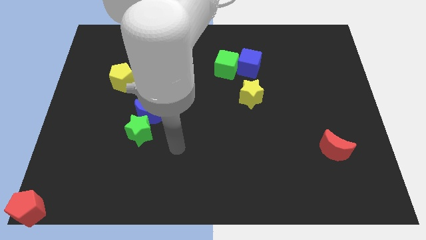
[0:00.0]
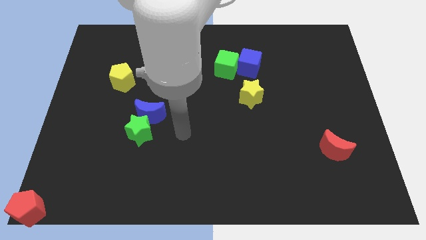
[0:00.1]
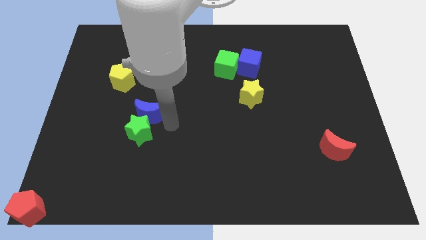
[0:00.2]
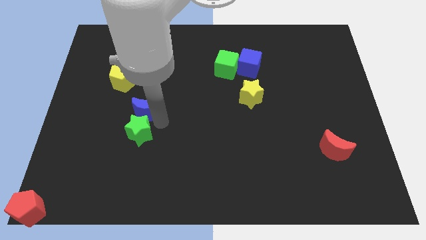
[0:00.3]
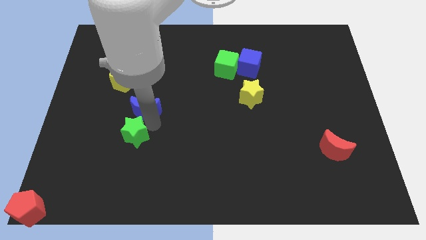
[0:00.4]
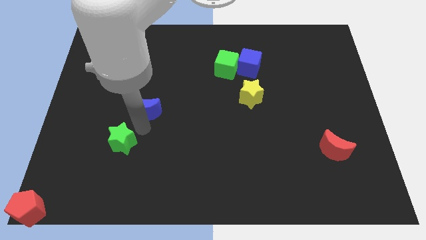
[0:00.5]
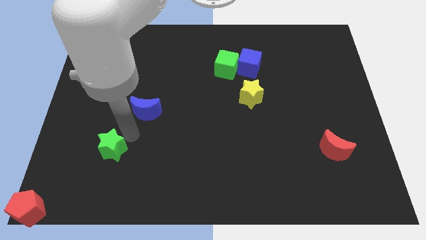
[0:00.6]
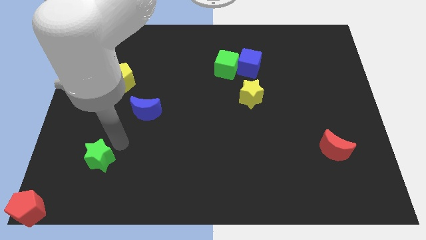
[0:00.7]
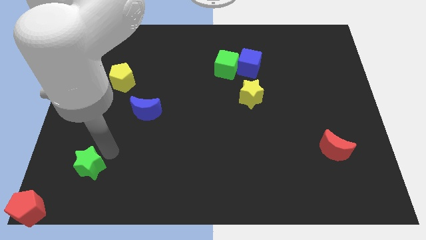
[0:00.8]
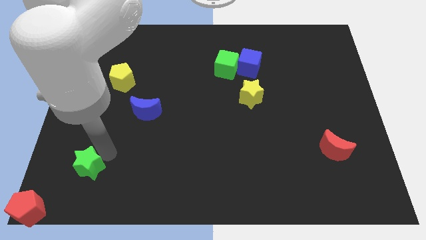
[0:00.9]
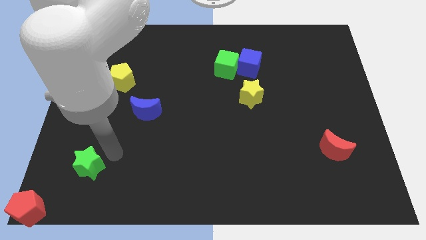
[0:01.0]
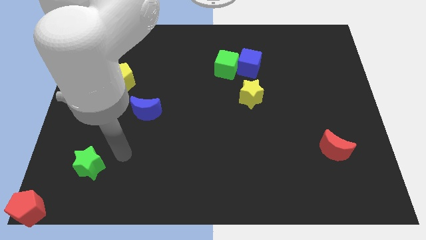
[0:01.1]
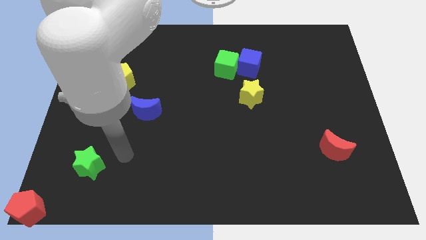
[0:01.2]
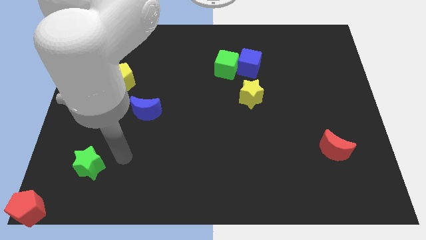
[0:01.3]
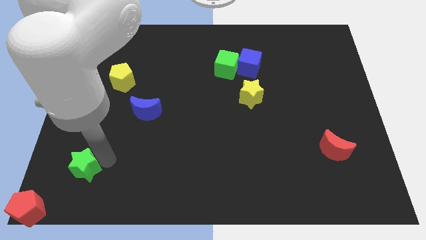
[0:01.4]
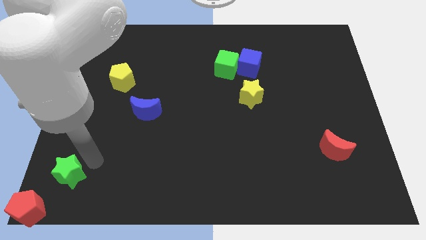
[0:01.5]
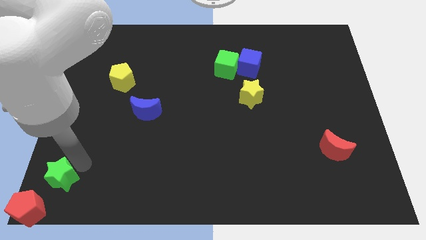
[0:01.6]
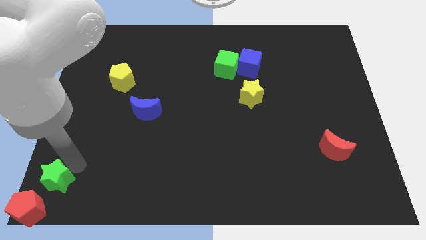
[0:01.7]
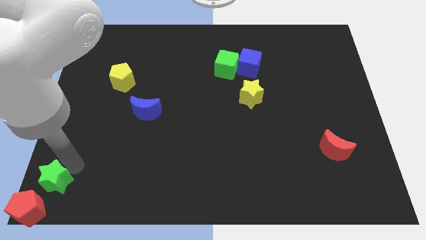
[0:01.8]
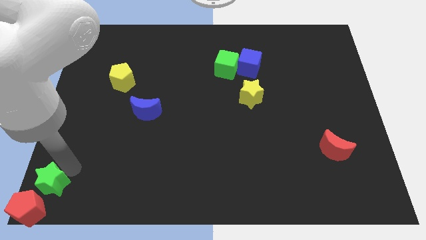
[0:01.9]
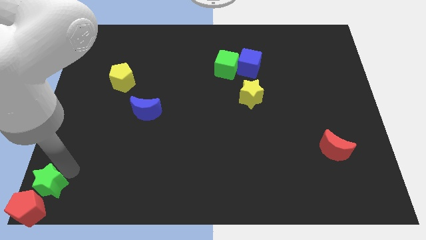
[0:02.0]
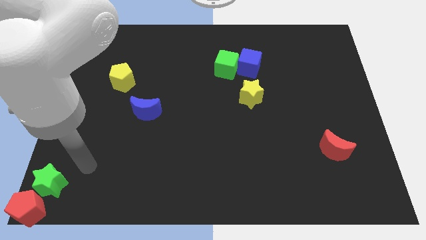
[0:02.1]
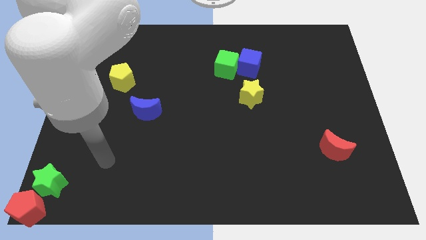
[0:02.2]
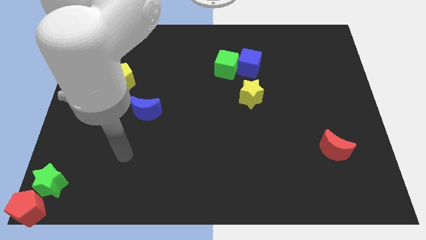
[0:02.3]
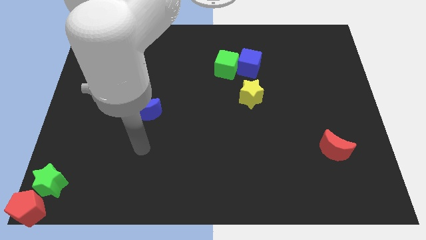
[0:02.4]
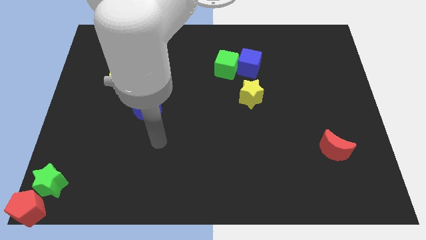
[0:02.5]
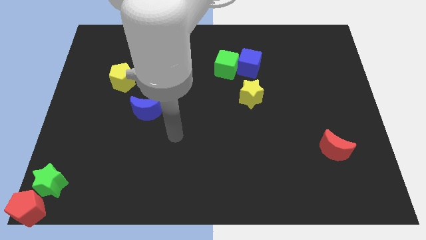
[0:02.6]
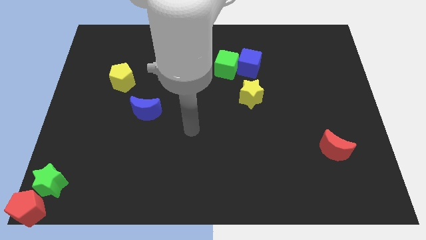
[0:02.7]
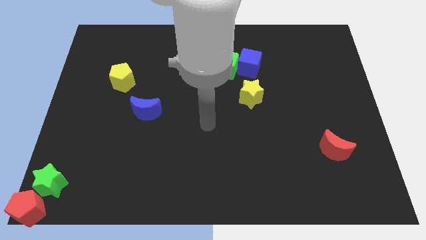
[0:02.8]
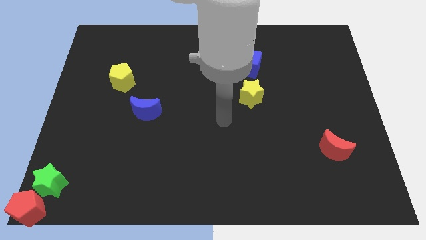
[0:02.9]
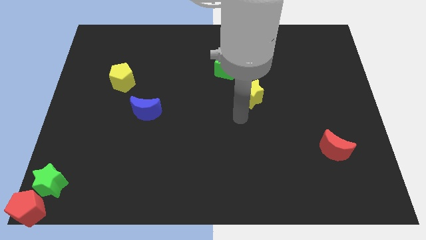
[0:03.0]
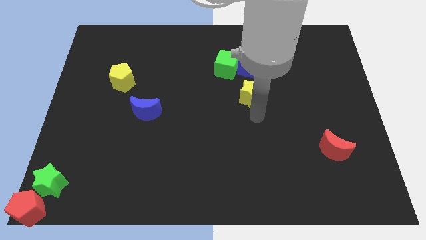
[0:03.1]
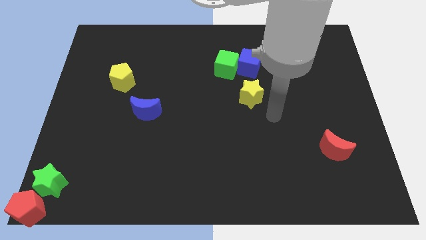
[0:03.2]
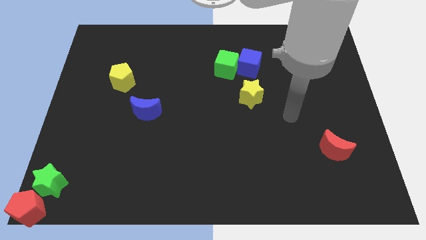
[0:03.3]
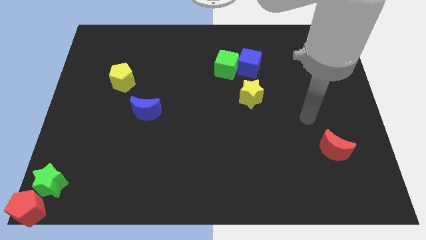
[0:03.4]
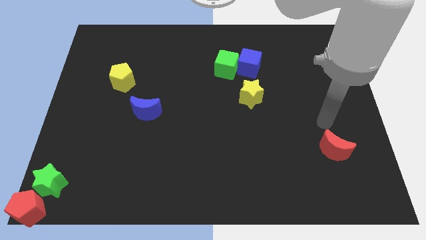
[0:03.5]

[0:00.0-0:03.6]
push the green star towards the top of the red pentagon

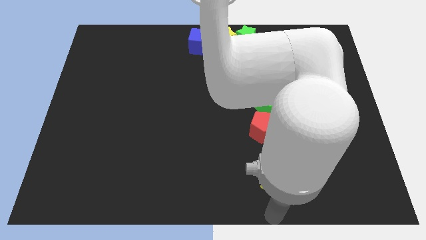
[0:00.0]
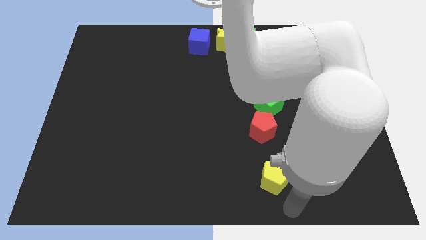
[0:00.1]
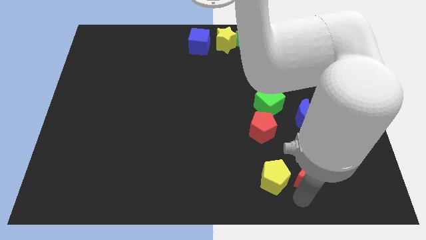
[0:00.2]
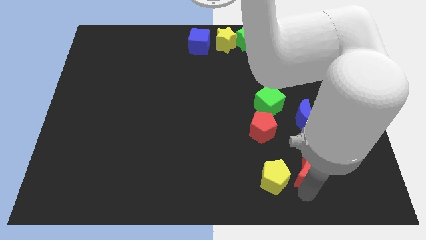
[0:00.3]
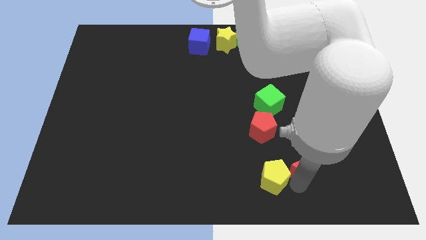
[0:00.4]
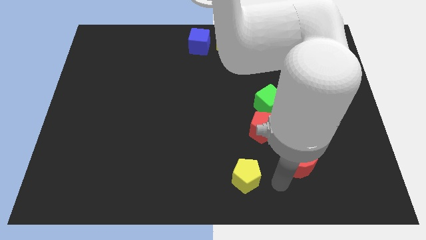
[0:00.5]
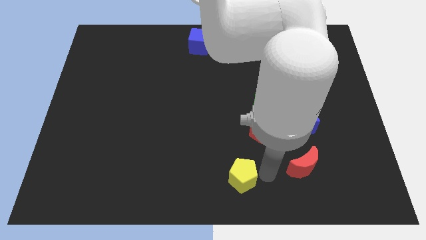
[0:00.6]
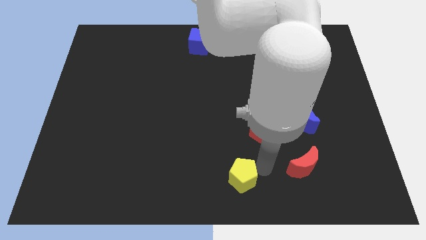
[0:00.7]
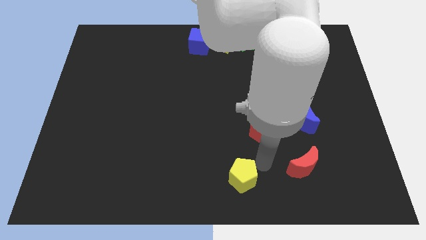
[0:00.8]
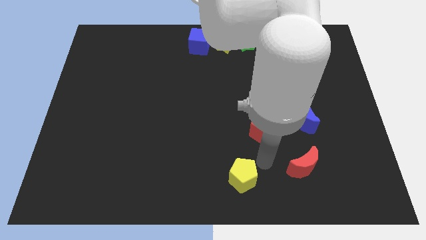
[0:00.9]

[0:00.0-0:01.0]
separate the yellow pentagon and red moon

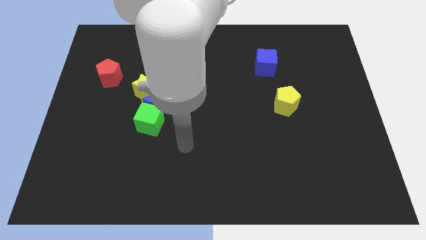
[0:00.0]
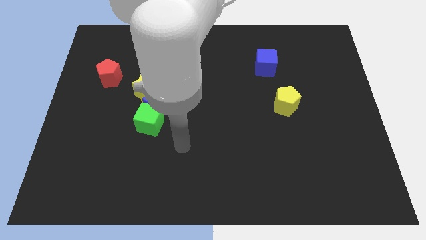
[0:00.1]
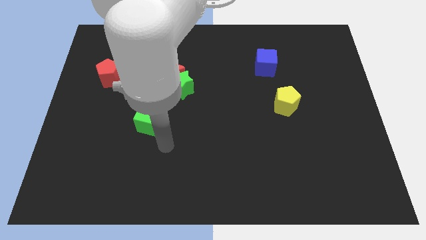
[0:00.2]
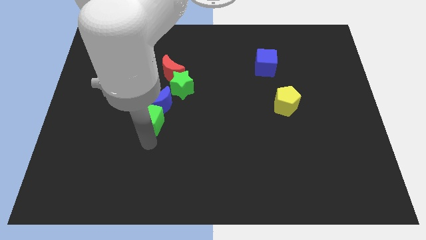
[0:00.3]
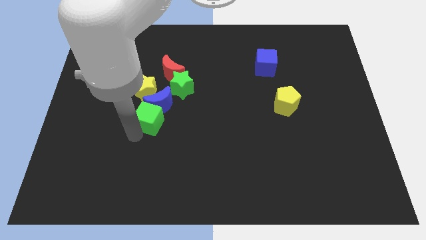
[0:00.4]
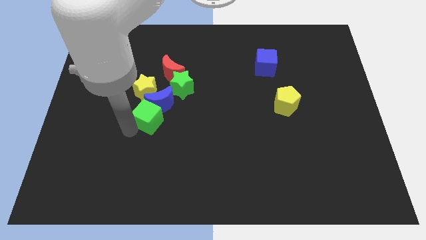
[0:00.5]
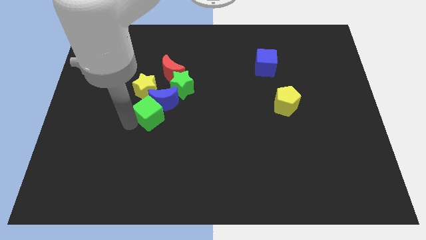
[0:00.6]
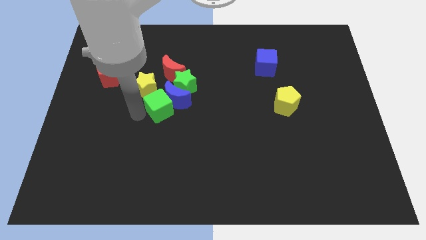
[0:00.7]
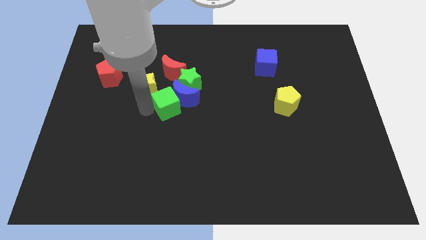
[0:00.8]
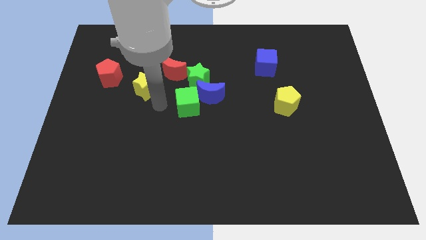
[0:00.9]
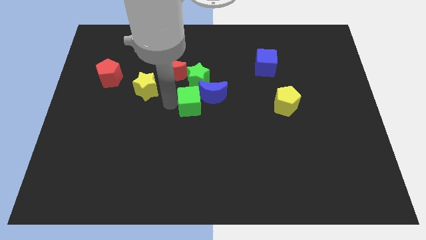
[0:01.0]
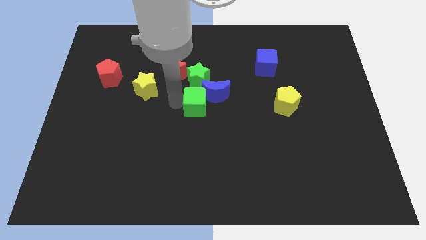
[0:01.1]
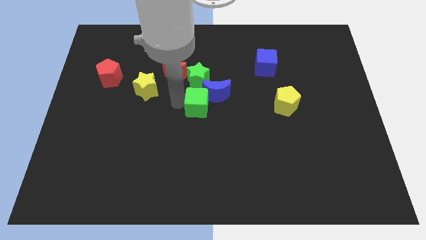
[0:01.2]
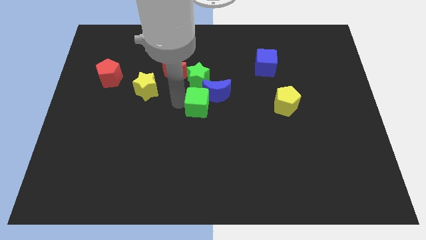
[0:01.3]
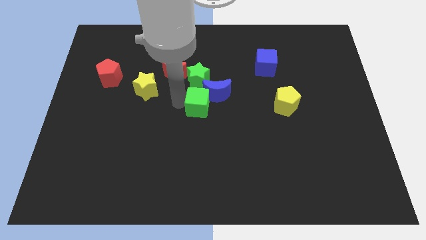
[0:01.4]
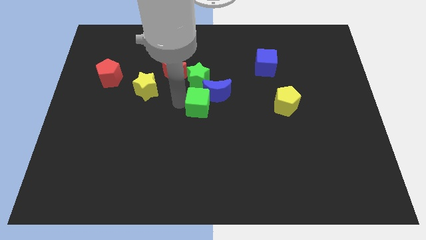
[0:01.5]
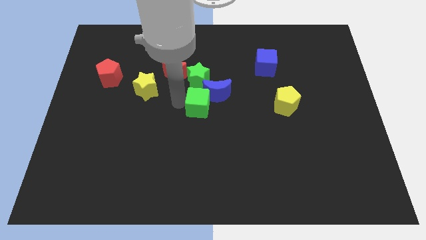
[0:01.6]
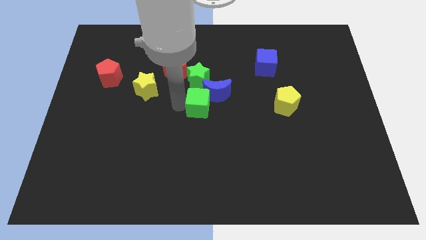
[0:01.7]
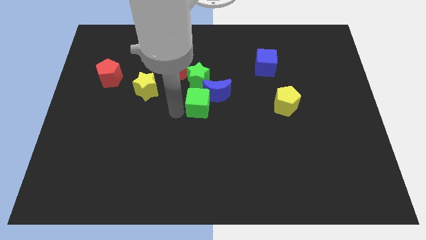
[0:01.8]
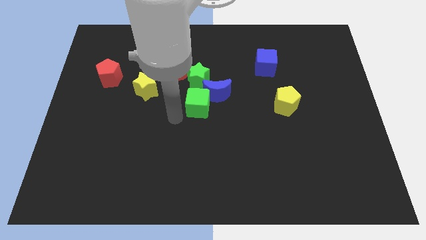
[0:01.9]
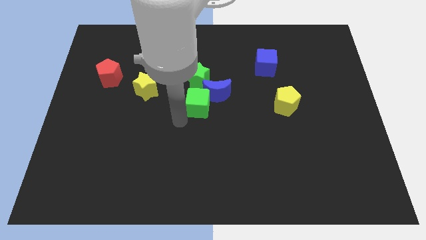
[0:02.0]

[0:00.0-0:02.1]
move the green cube to the center

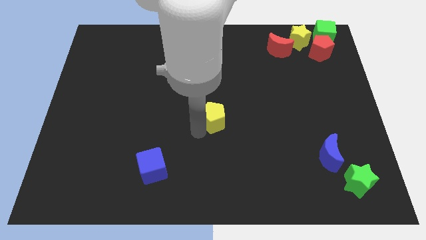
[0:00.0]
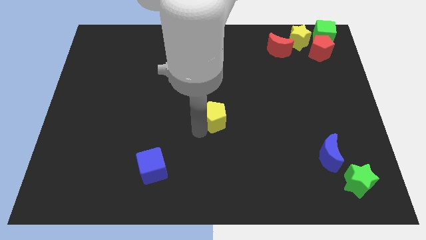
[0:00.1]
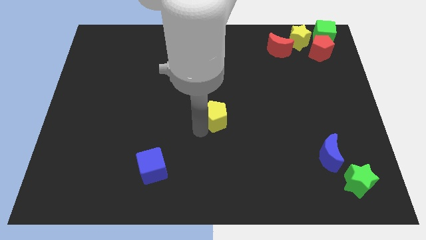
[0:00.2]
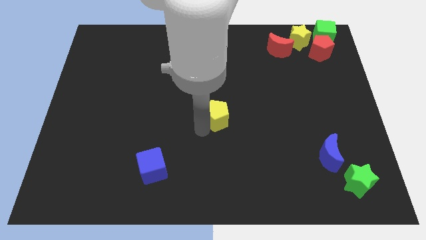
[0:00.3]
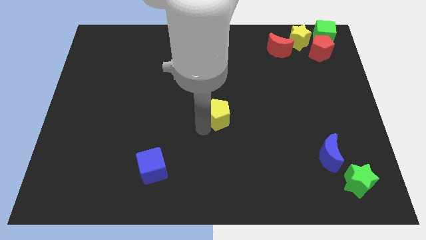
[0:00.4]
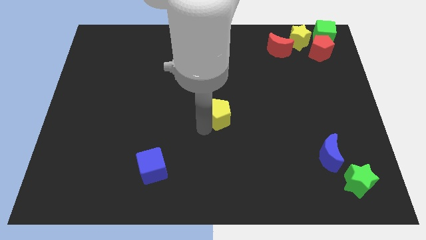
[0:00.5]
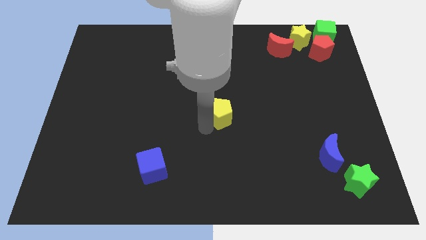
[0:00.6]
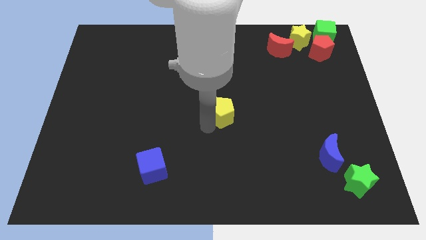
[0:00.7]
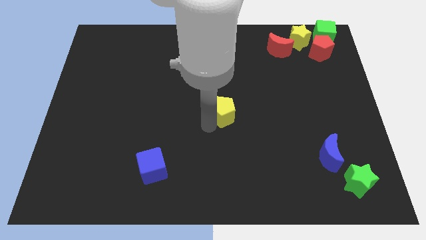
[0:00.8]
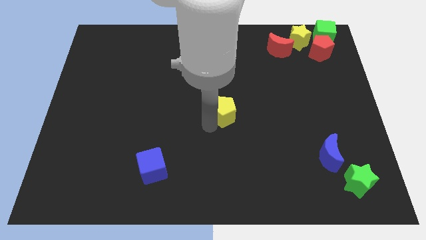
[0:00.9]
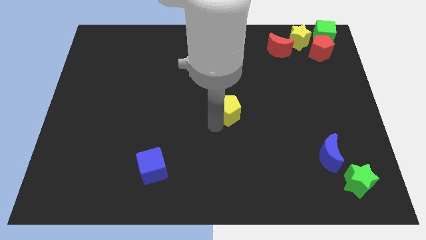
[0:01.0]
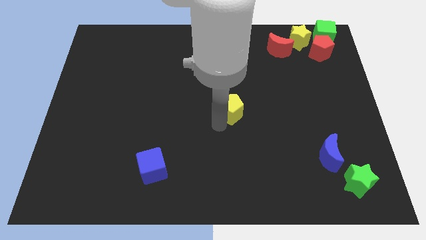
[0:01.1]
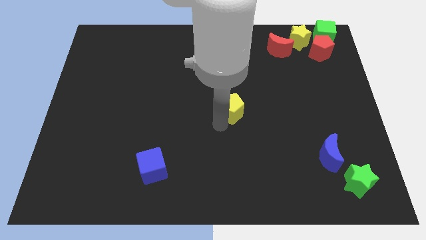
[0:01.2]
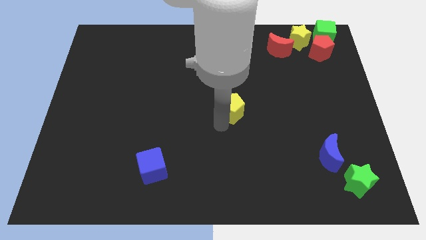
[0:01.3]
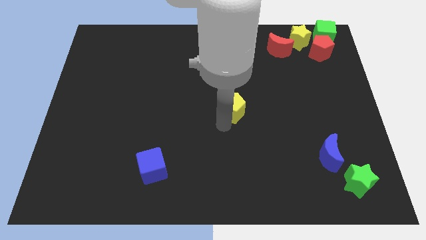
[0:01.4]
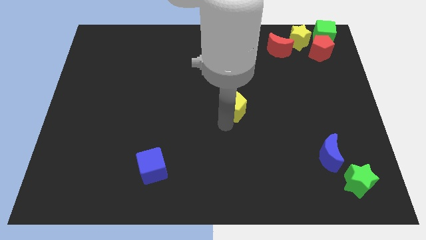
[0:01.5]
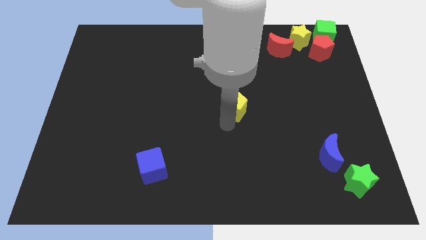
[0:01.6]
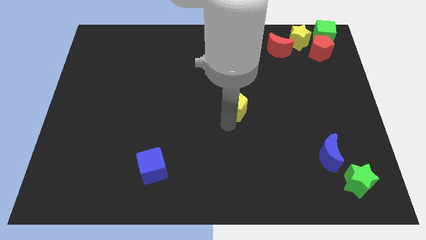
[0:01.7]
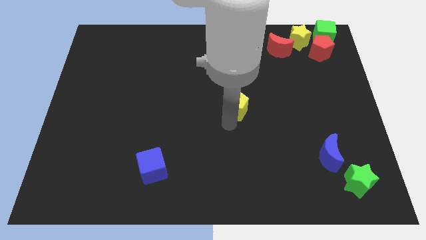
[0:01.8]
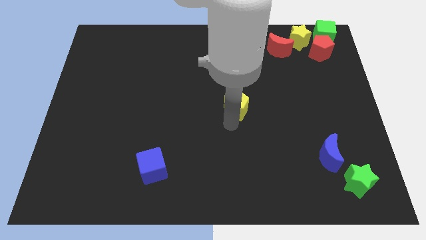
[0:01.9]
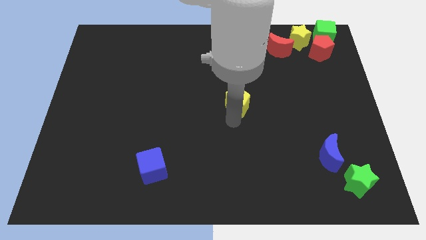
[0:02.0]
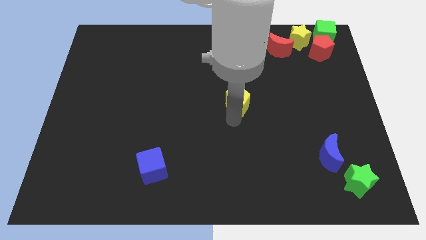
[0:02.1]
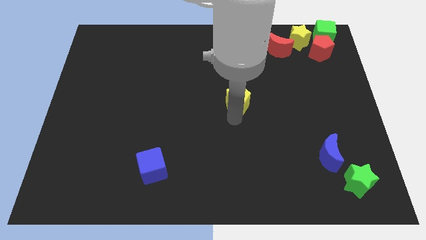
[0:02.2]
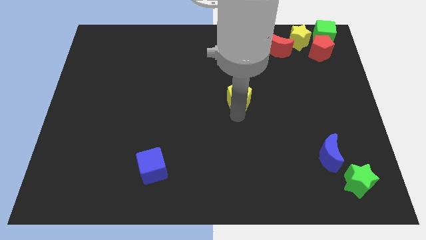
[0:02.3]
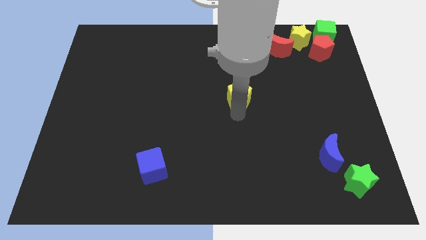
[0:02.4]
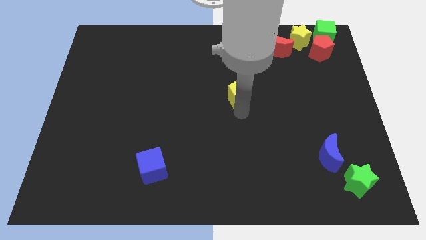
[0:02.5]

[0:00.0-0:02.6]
place the yellow pentagon at the center of the board
